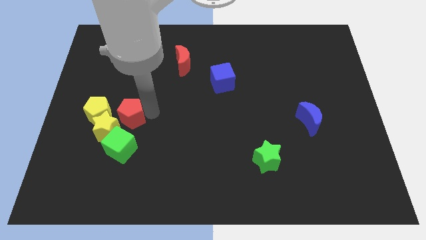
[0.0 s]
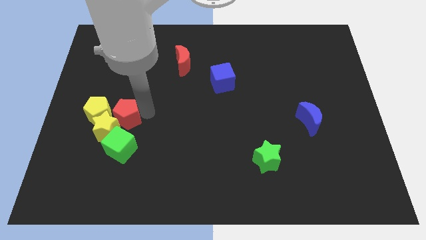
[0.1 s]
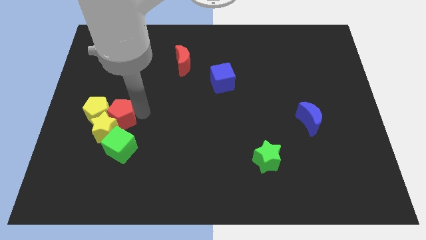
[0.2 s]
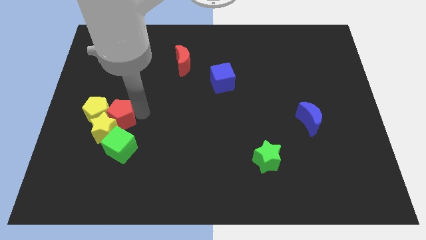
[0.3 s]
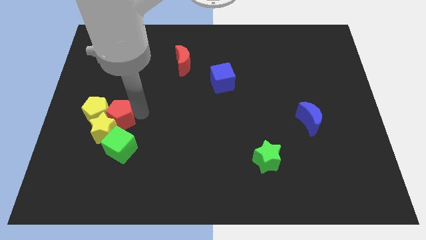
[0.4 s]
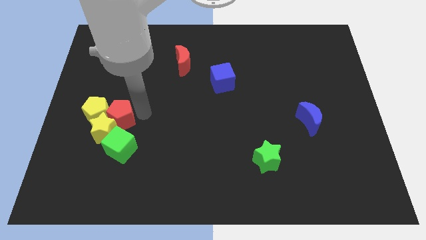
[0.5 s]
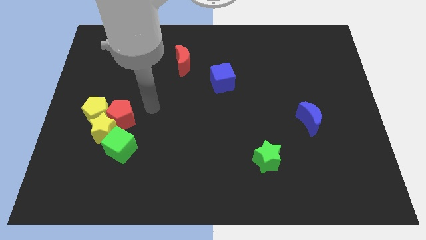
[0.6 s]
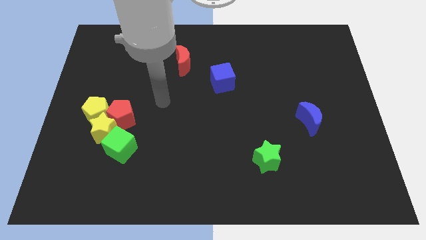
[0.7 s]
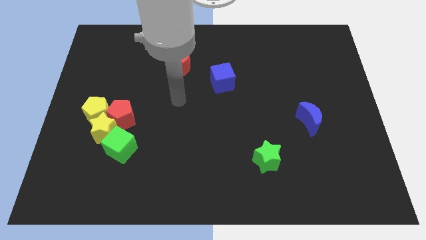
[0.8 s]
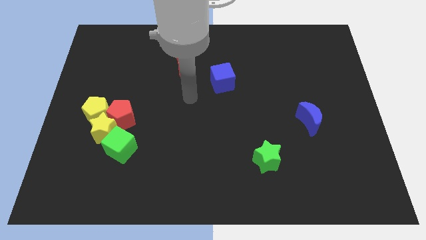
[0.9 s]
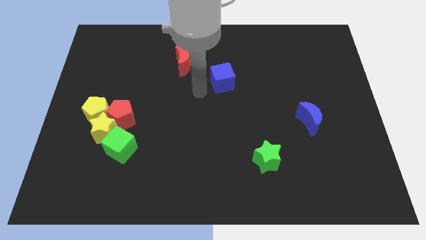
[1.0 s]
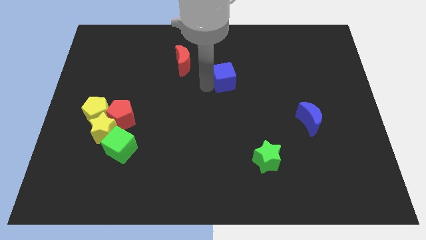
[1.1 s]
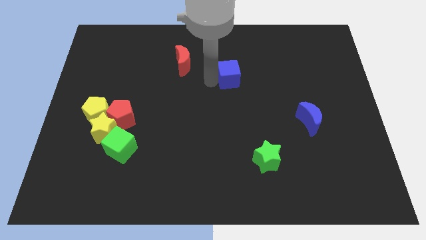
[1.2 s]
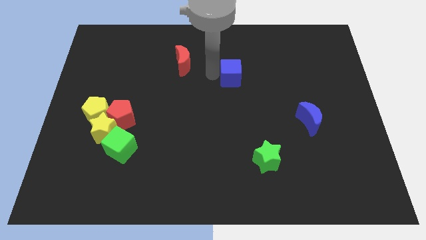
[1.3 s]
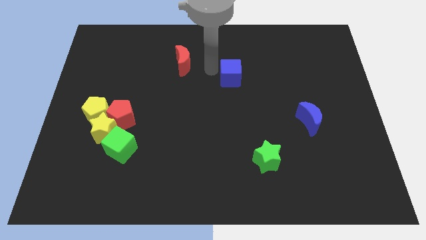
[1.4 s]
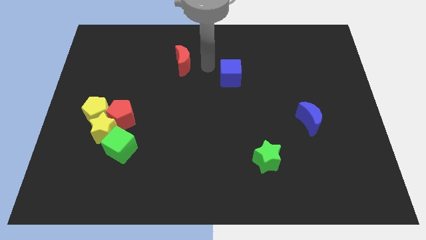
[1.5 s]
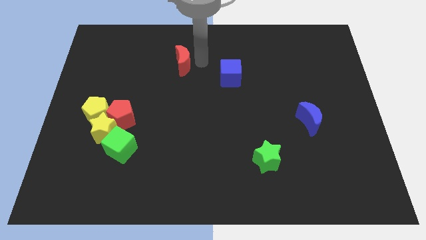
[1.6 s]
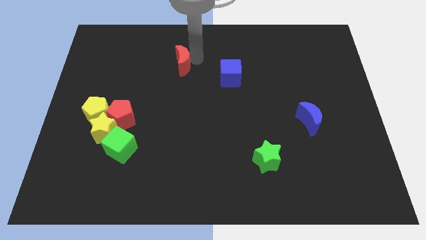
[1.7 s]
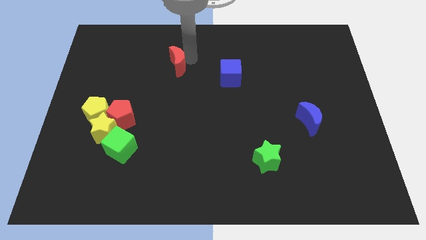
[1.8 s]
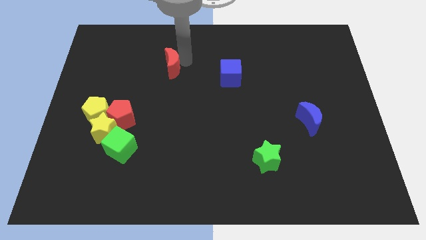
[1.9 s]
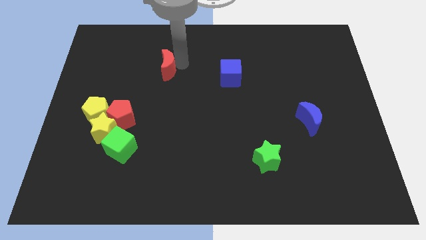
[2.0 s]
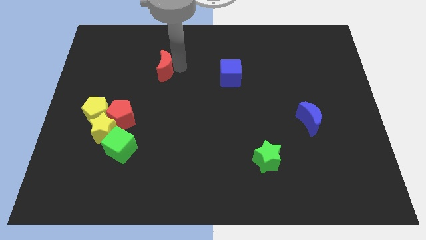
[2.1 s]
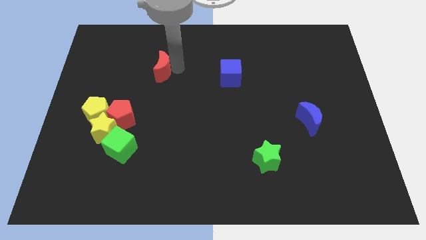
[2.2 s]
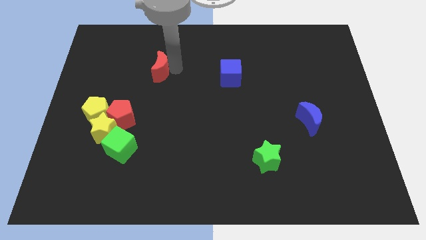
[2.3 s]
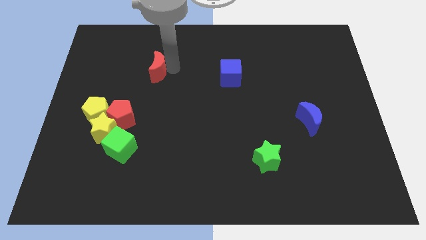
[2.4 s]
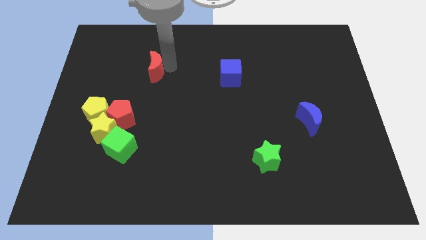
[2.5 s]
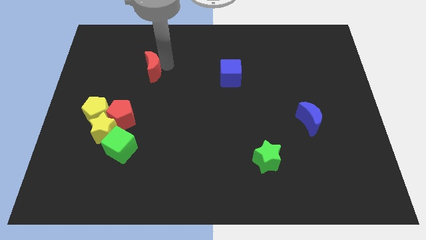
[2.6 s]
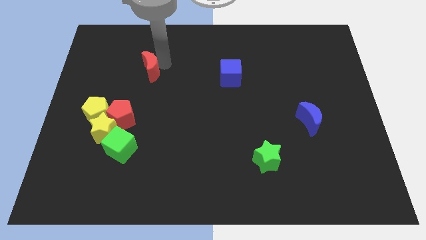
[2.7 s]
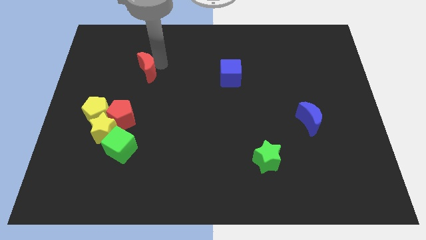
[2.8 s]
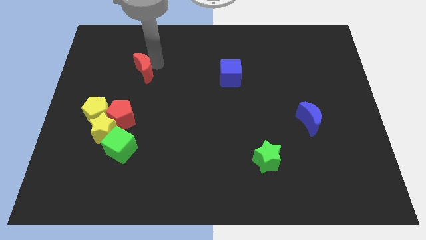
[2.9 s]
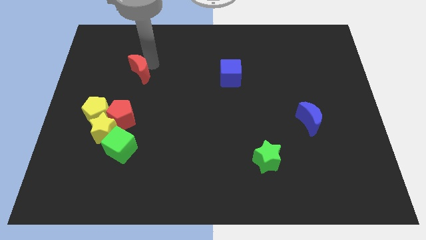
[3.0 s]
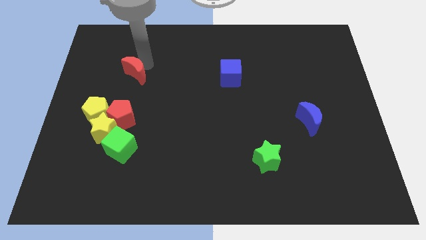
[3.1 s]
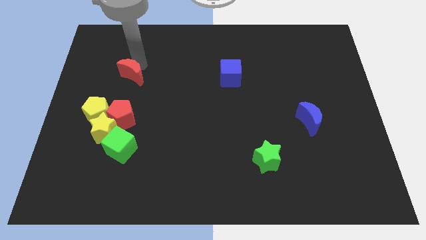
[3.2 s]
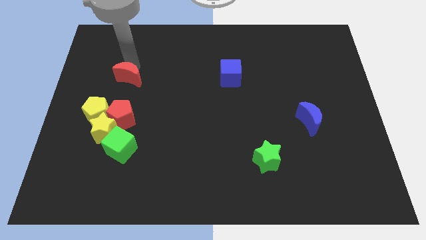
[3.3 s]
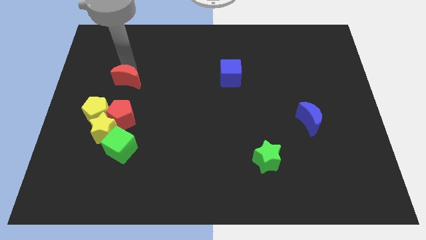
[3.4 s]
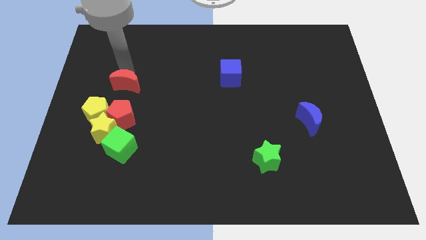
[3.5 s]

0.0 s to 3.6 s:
place the red moon to the top side of the red pentagon

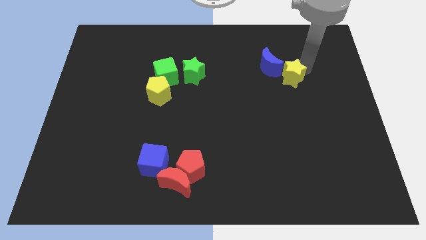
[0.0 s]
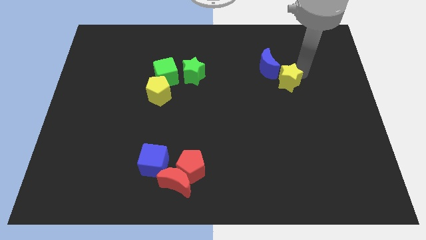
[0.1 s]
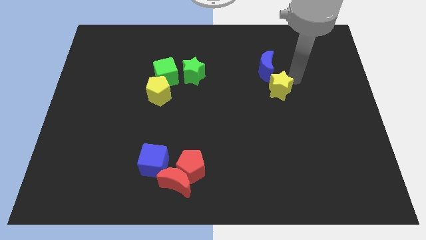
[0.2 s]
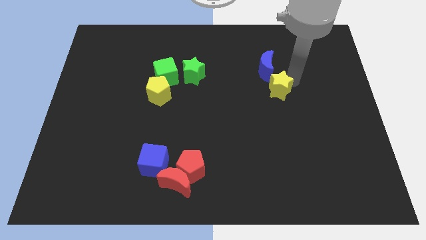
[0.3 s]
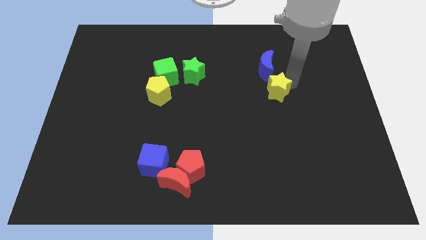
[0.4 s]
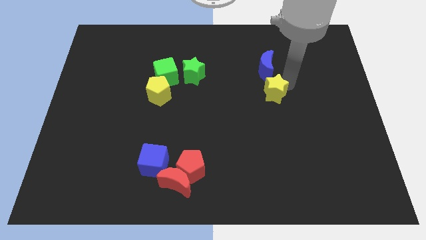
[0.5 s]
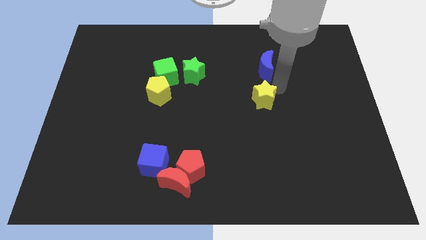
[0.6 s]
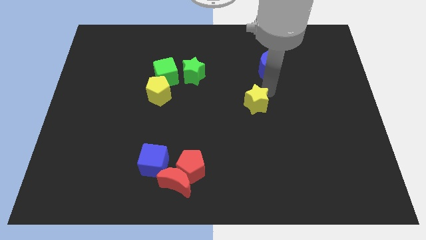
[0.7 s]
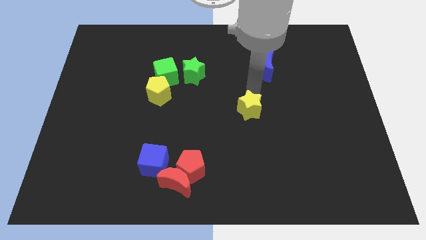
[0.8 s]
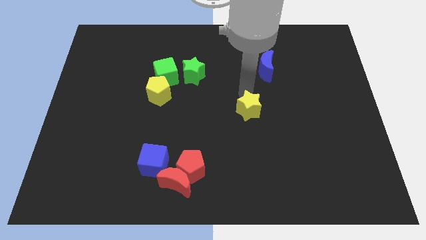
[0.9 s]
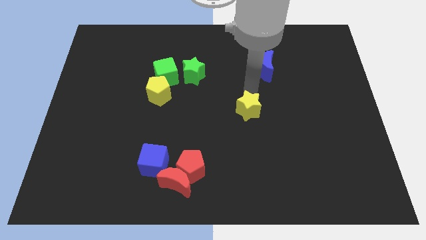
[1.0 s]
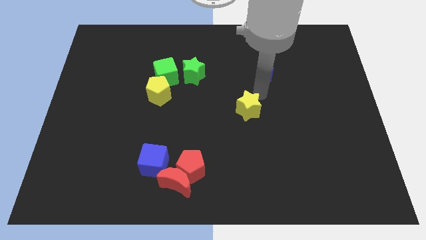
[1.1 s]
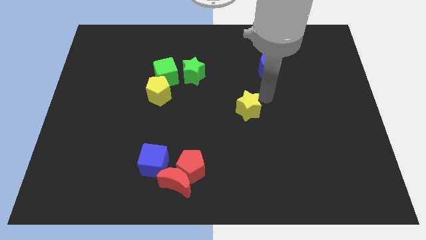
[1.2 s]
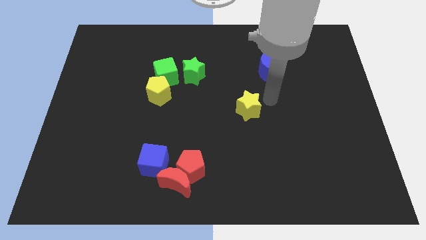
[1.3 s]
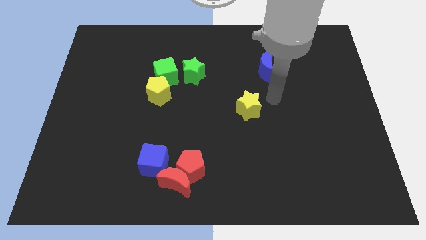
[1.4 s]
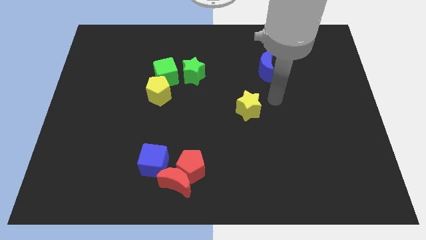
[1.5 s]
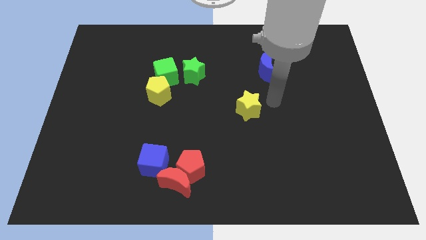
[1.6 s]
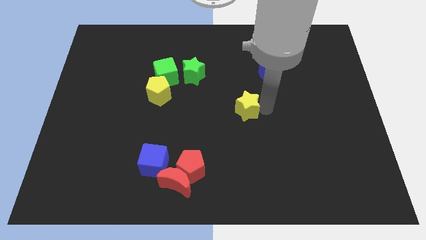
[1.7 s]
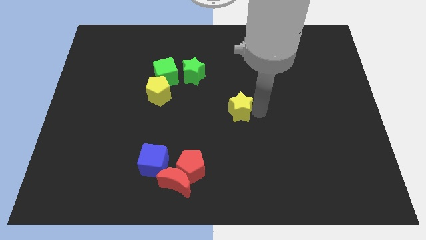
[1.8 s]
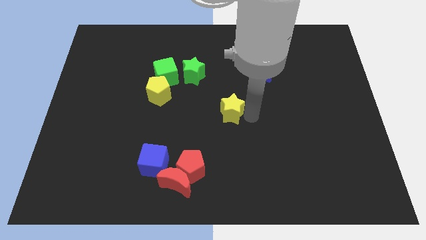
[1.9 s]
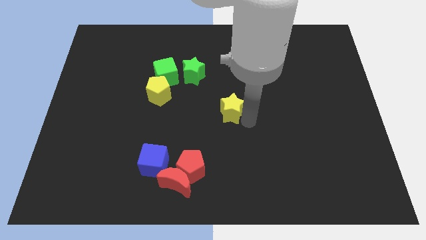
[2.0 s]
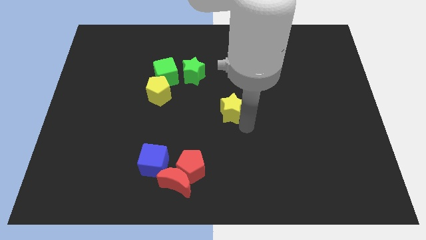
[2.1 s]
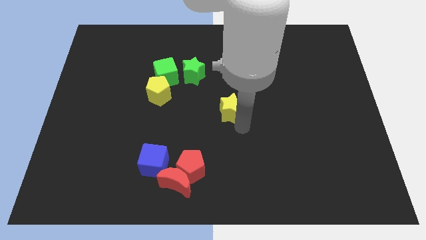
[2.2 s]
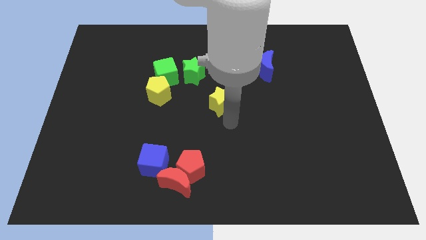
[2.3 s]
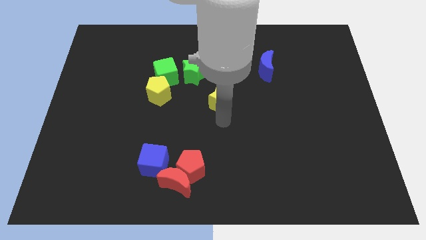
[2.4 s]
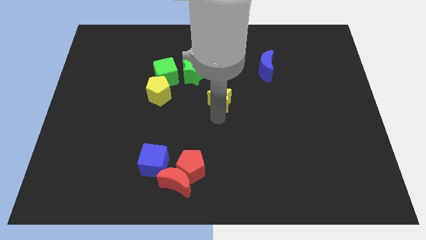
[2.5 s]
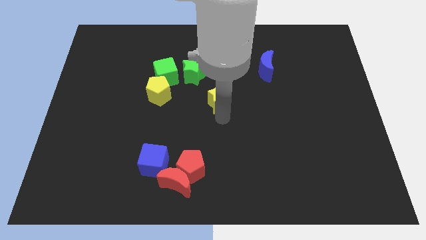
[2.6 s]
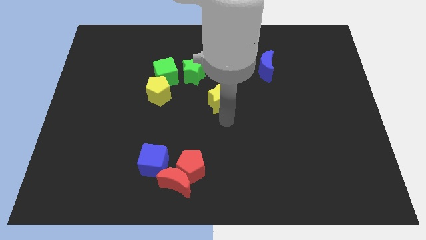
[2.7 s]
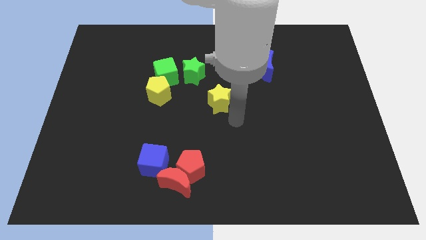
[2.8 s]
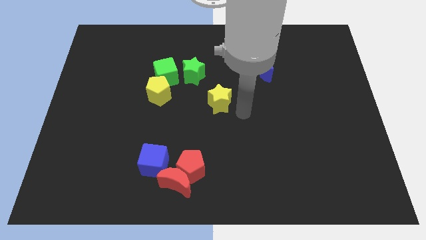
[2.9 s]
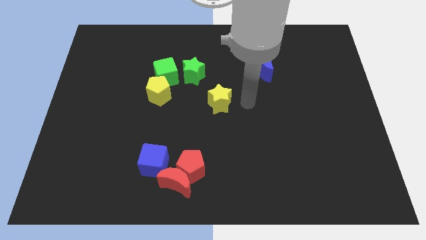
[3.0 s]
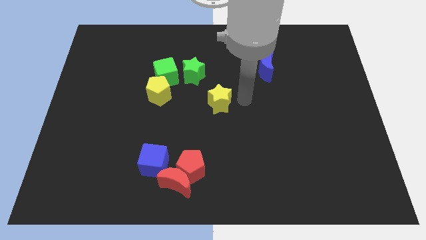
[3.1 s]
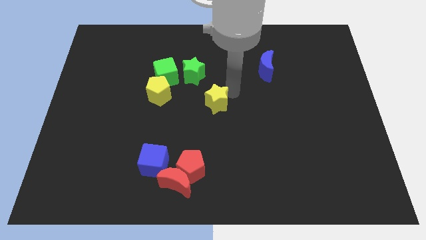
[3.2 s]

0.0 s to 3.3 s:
move yellow star right below the green star

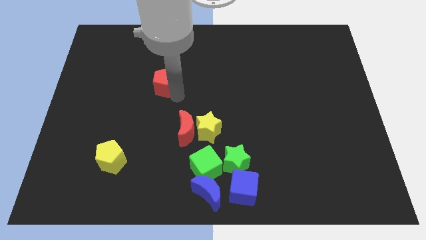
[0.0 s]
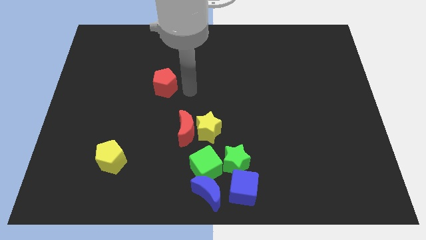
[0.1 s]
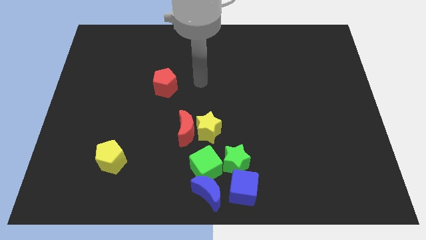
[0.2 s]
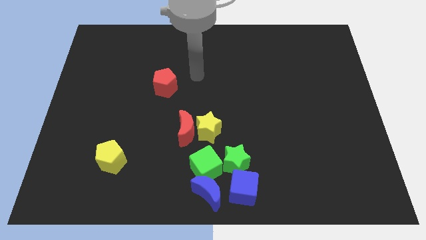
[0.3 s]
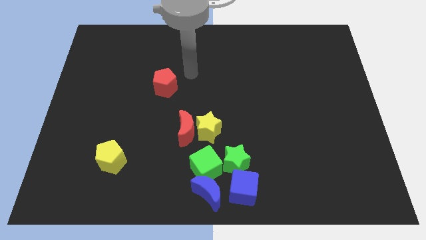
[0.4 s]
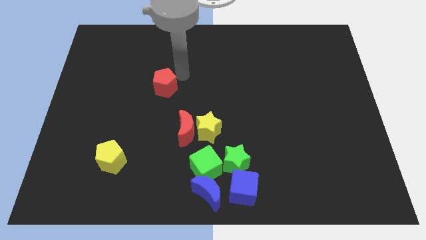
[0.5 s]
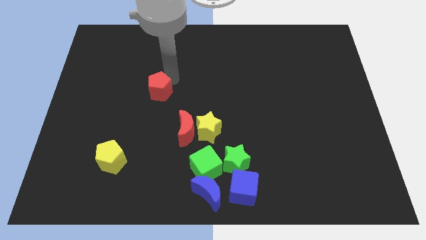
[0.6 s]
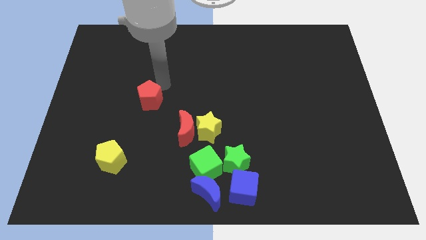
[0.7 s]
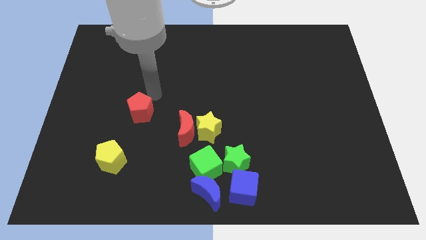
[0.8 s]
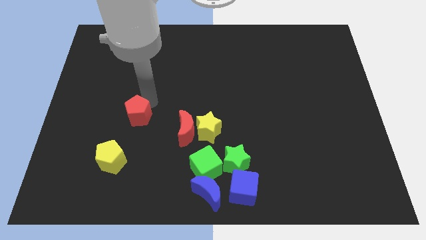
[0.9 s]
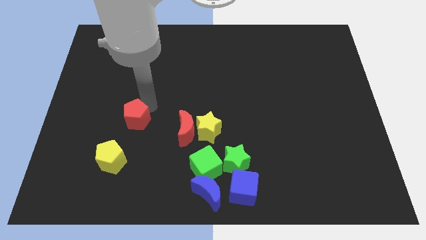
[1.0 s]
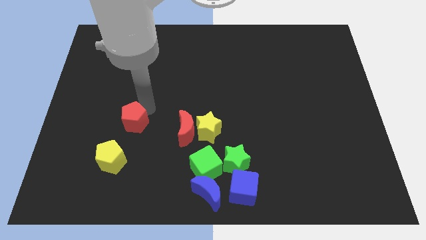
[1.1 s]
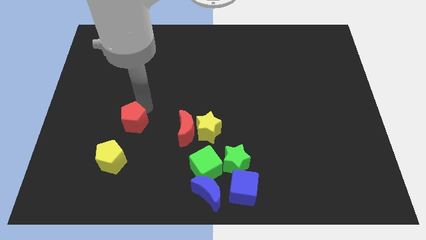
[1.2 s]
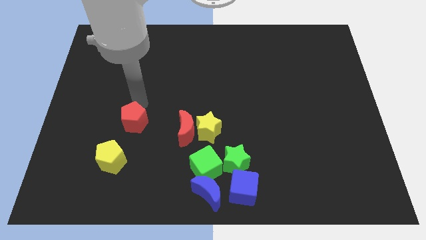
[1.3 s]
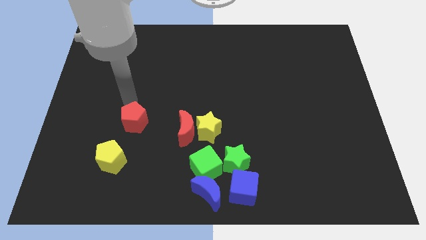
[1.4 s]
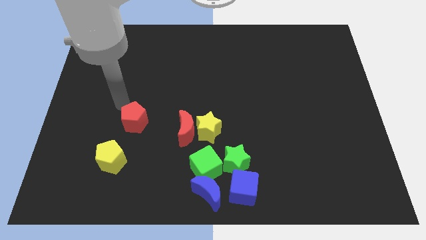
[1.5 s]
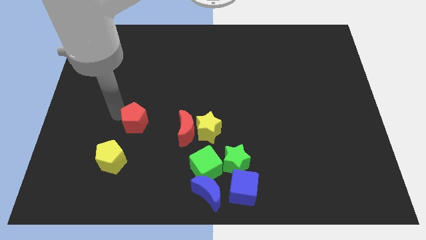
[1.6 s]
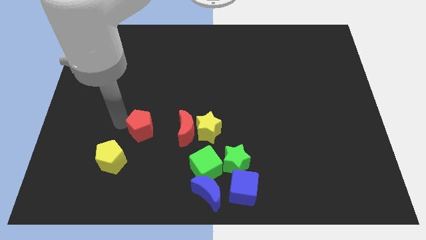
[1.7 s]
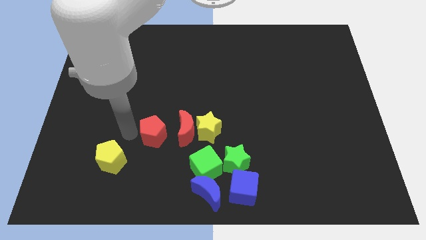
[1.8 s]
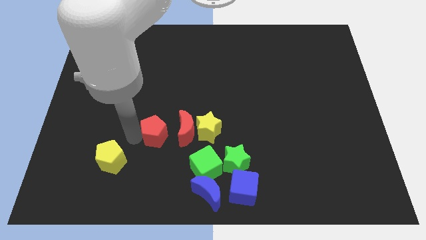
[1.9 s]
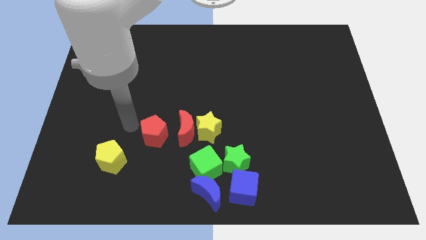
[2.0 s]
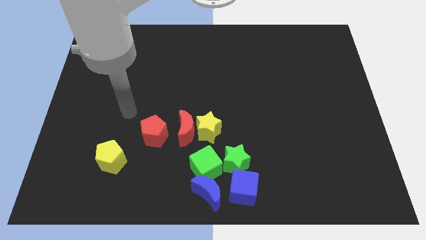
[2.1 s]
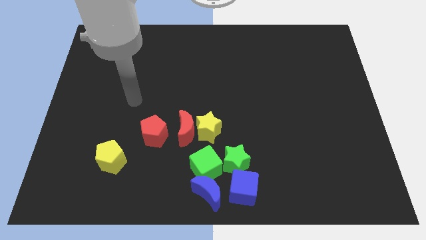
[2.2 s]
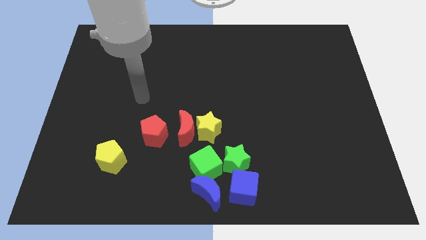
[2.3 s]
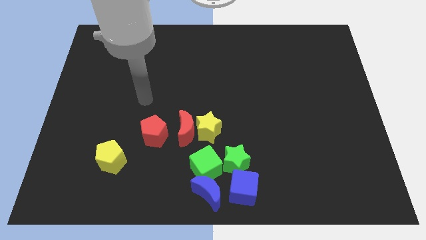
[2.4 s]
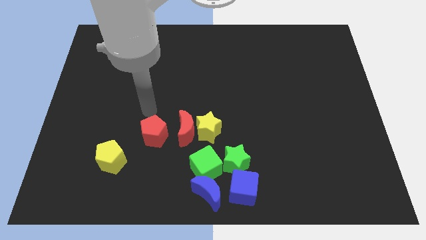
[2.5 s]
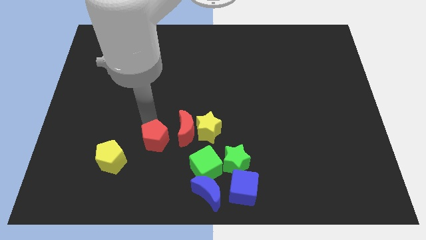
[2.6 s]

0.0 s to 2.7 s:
drag the red pentagon parallel to the left side of the red moon
